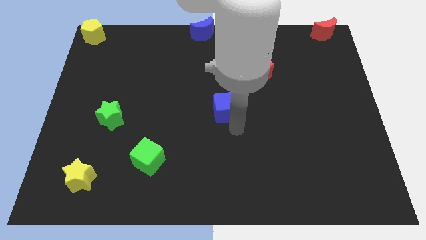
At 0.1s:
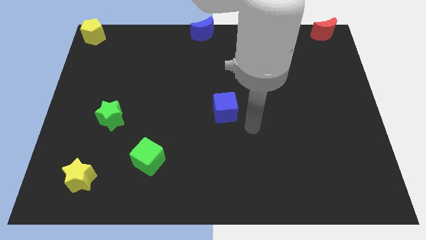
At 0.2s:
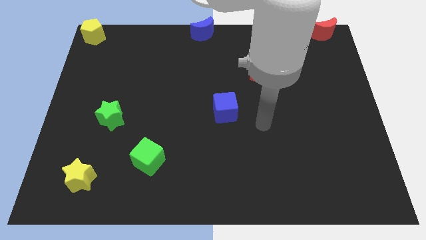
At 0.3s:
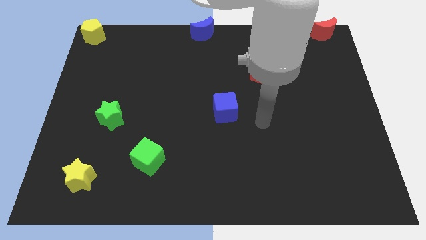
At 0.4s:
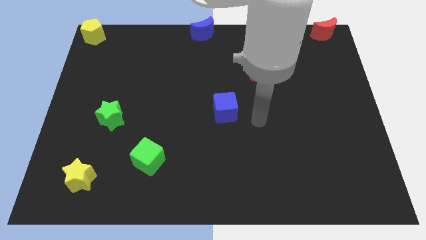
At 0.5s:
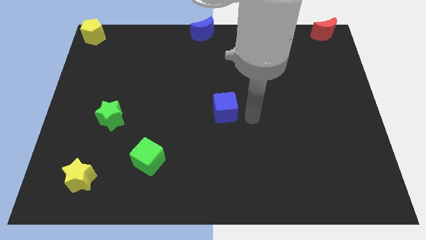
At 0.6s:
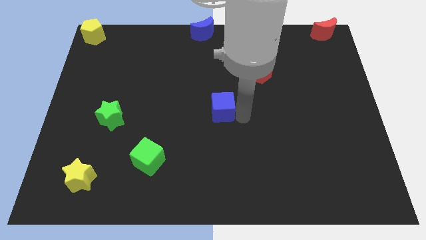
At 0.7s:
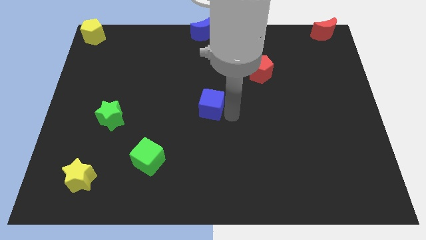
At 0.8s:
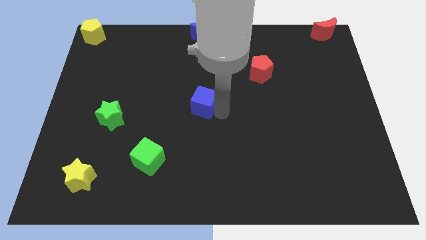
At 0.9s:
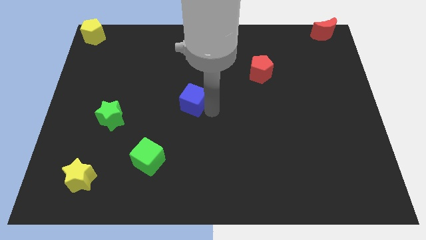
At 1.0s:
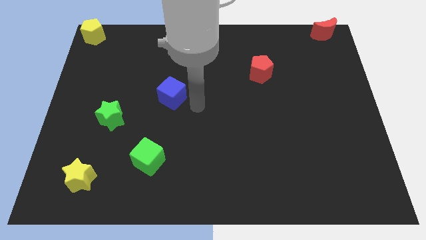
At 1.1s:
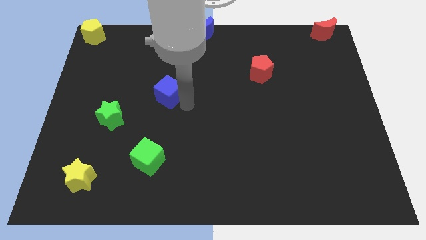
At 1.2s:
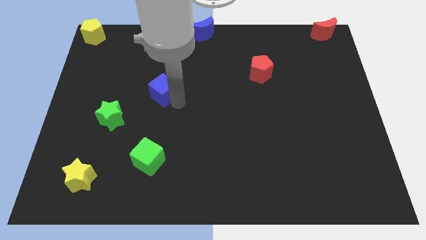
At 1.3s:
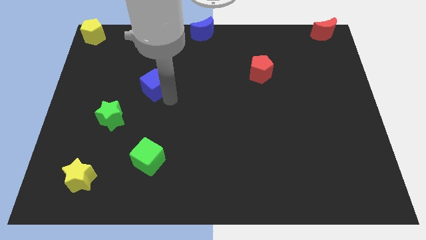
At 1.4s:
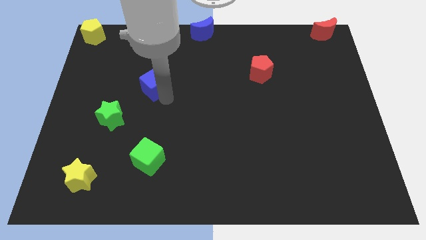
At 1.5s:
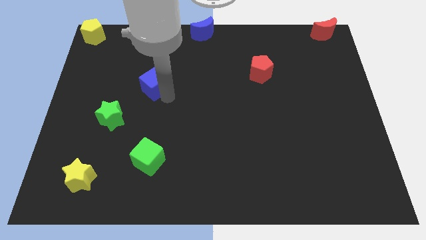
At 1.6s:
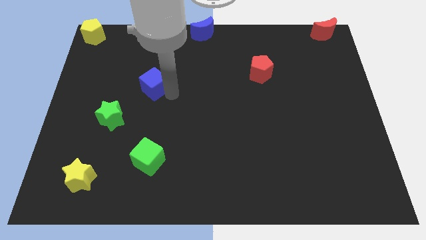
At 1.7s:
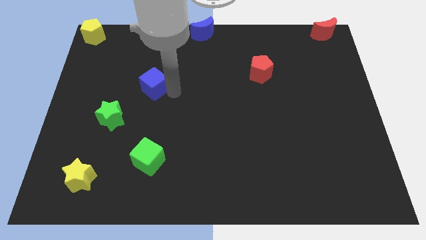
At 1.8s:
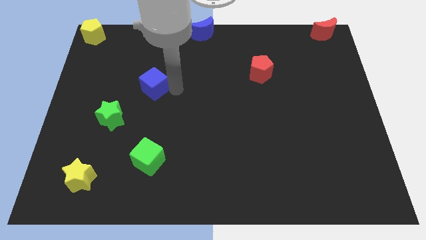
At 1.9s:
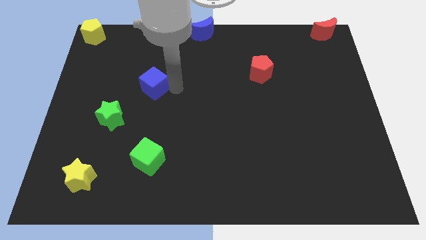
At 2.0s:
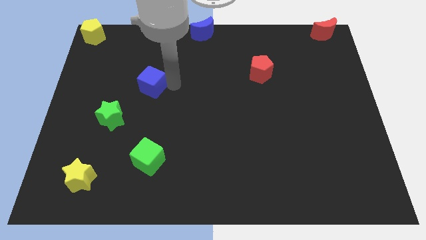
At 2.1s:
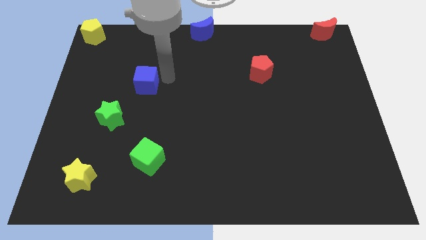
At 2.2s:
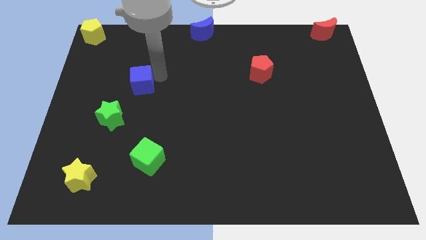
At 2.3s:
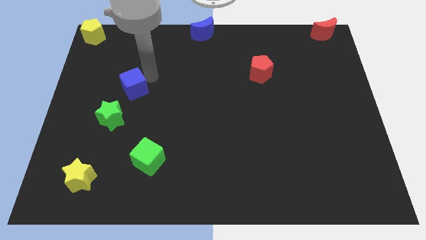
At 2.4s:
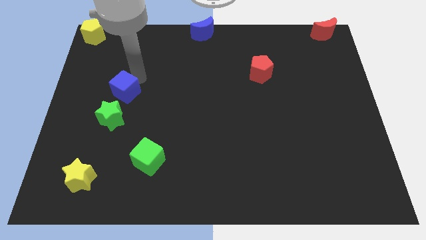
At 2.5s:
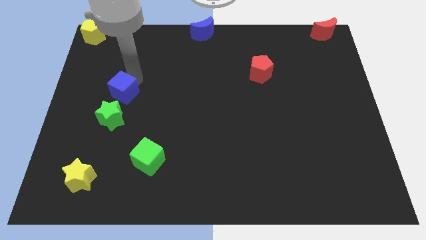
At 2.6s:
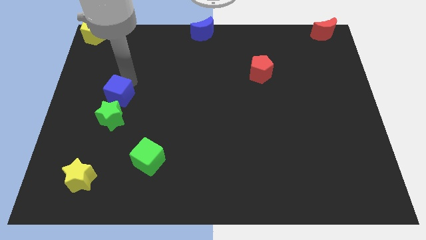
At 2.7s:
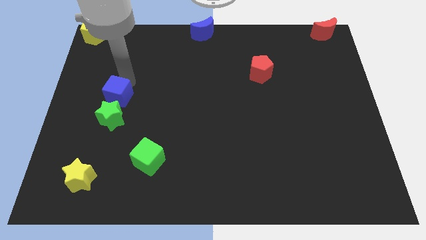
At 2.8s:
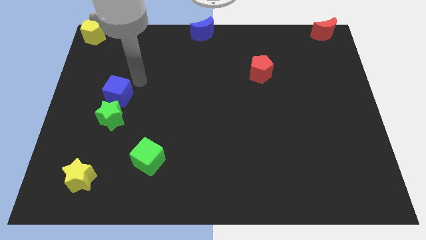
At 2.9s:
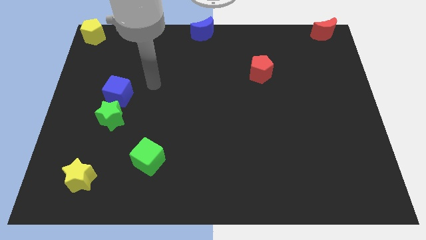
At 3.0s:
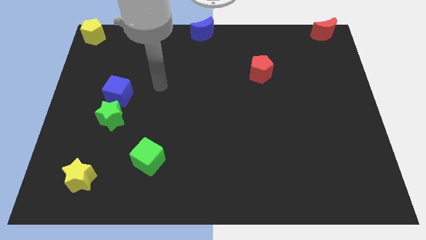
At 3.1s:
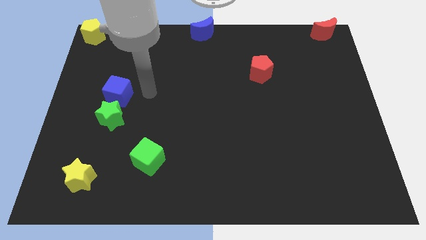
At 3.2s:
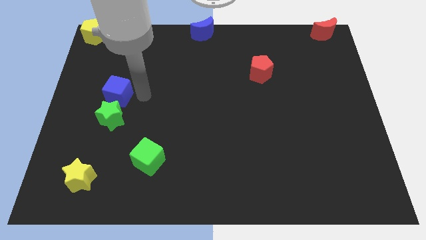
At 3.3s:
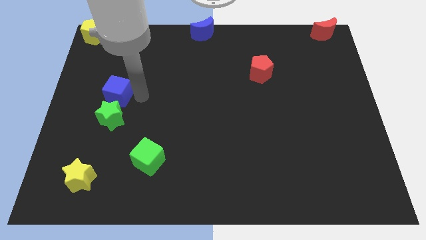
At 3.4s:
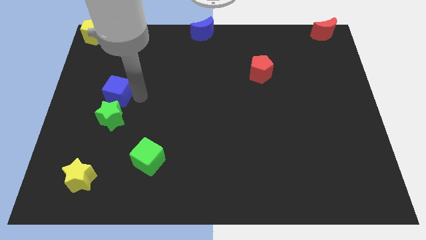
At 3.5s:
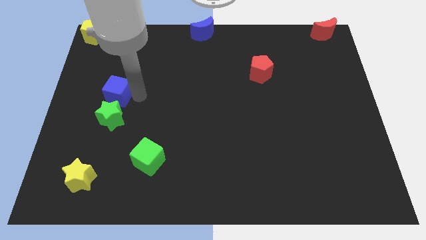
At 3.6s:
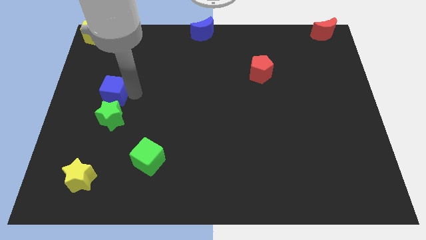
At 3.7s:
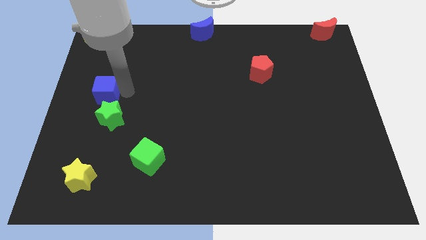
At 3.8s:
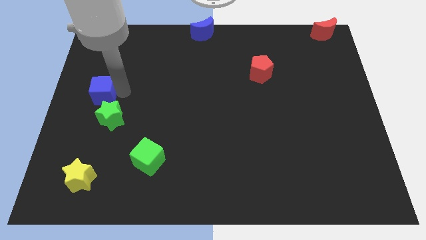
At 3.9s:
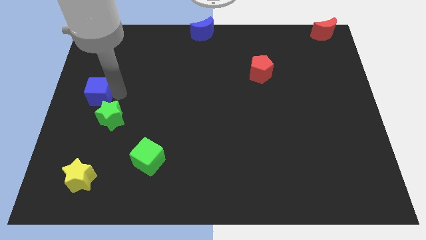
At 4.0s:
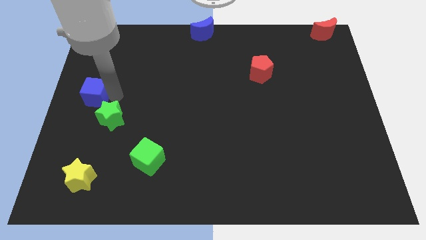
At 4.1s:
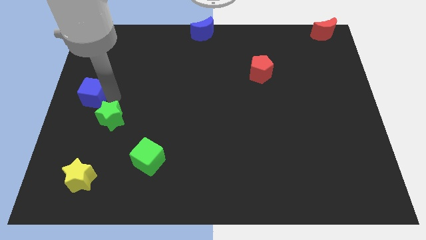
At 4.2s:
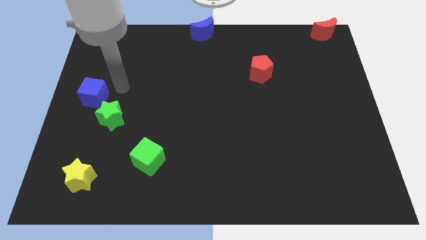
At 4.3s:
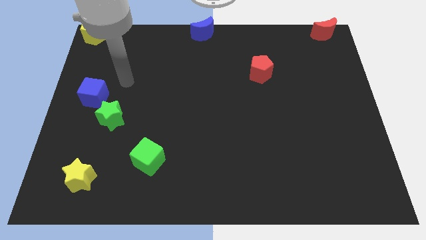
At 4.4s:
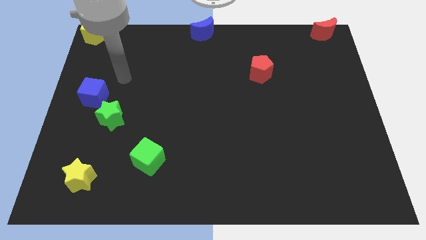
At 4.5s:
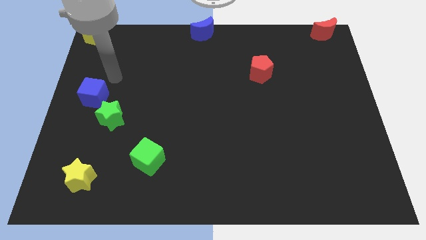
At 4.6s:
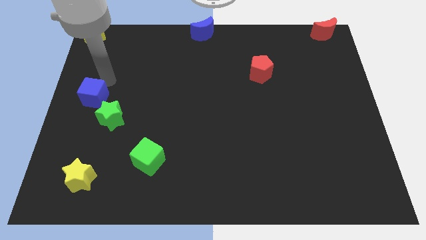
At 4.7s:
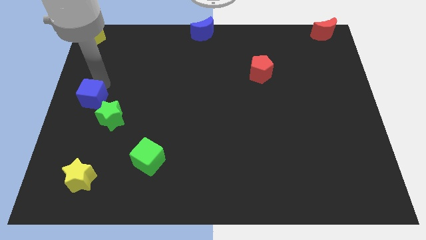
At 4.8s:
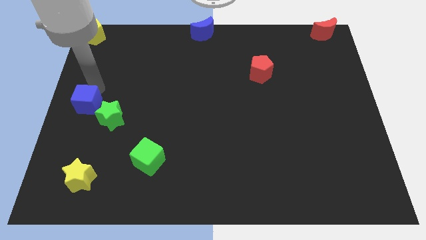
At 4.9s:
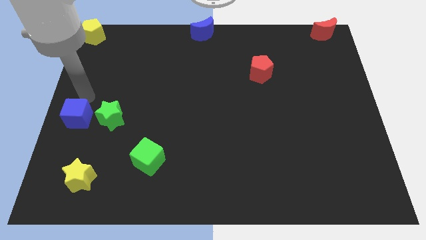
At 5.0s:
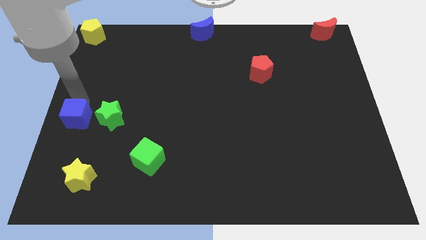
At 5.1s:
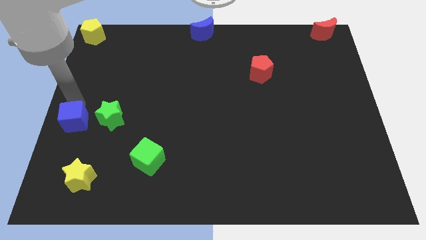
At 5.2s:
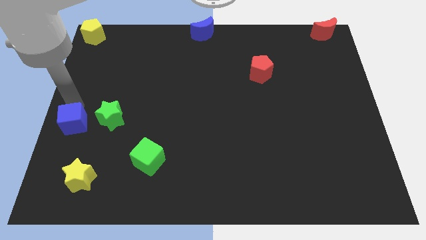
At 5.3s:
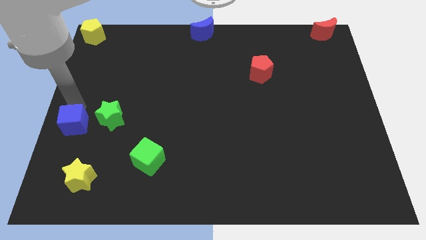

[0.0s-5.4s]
place the blue cube to left side of green star

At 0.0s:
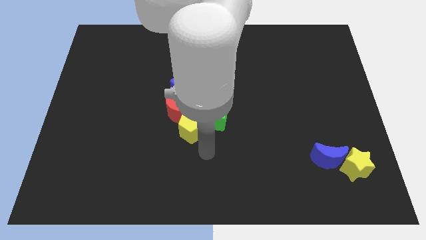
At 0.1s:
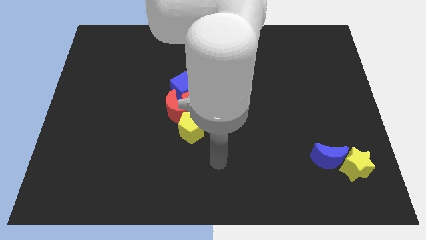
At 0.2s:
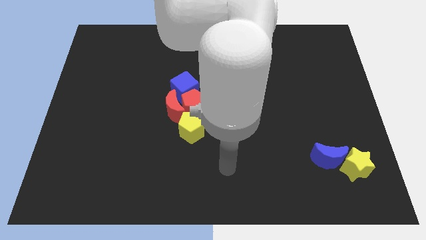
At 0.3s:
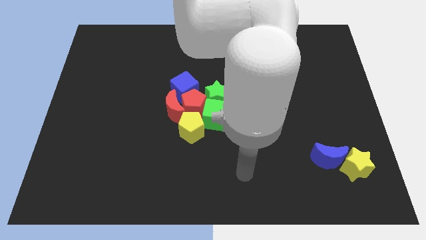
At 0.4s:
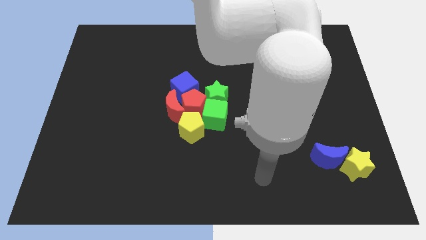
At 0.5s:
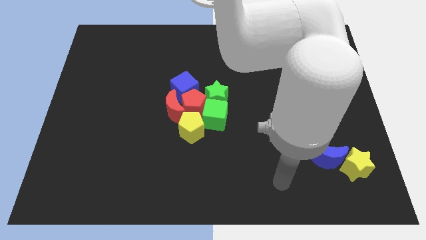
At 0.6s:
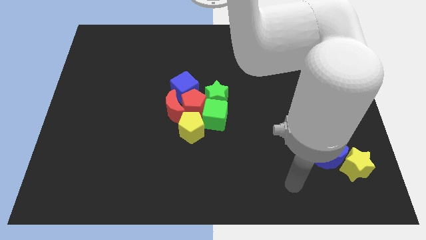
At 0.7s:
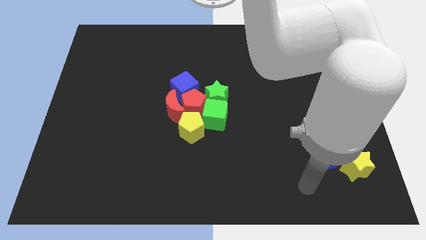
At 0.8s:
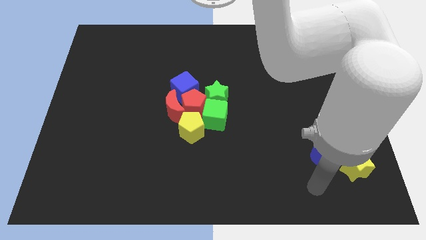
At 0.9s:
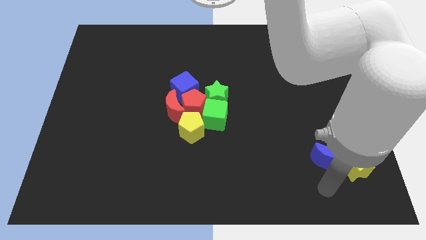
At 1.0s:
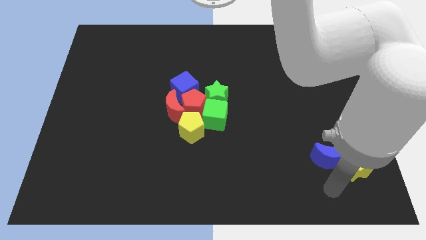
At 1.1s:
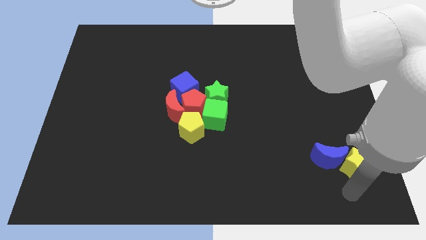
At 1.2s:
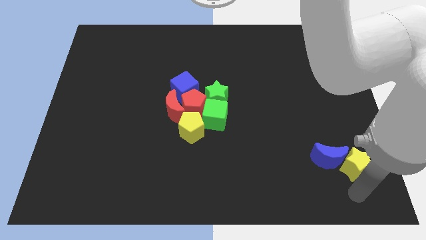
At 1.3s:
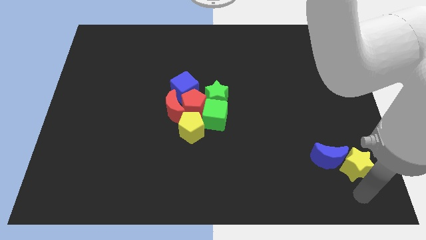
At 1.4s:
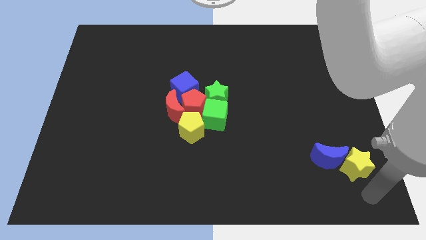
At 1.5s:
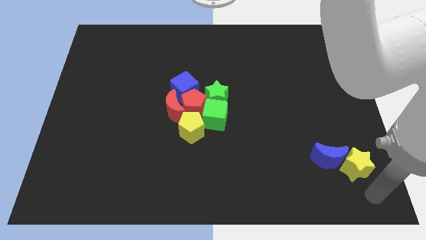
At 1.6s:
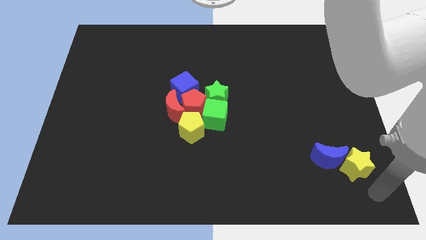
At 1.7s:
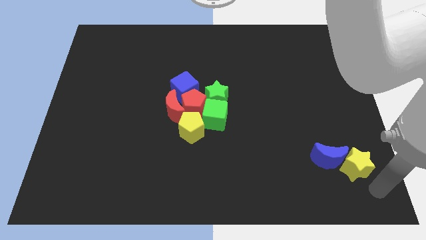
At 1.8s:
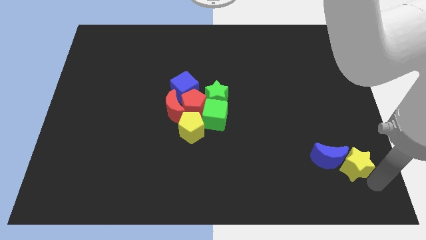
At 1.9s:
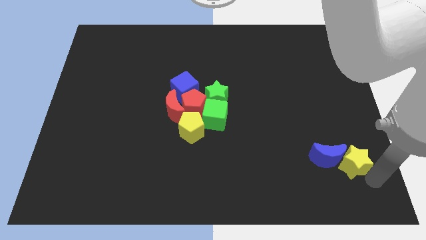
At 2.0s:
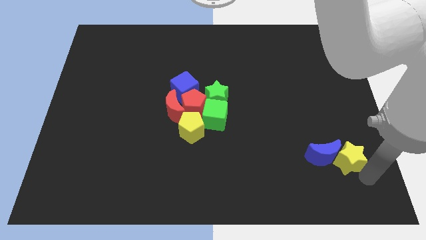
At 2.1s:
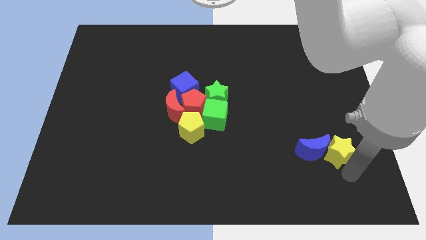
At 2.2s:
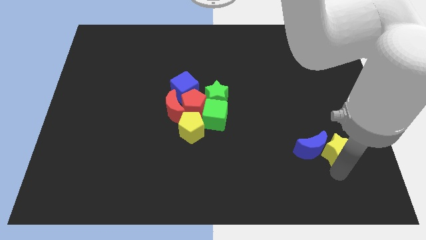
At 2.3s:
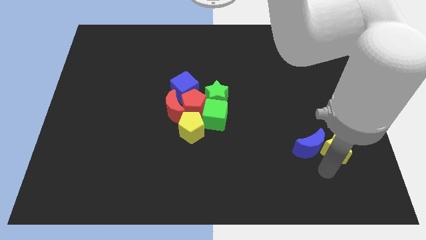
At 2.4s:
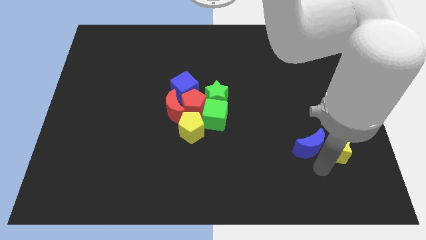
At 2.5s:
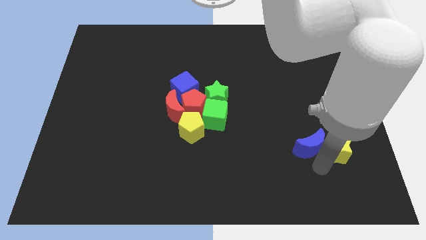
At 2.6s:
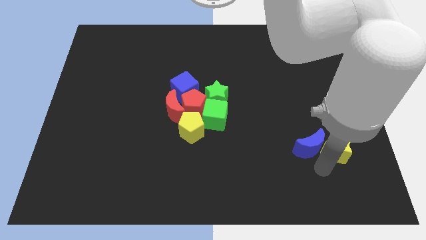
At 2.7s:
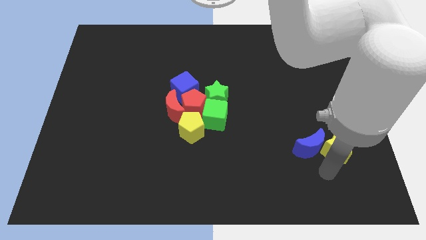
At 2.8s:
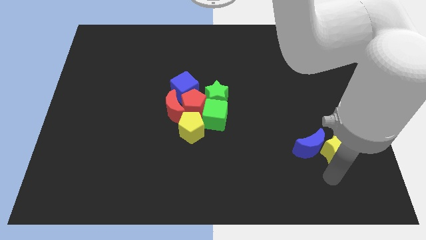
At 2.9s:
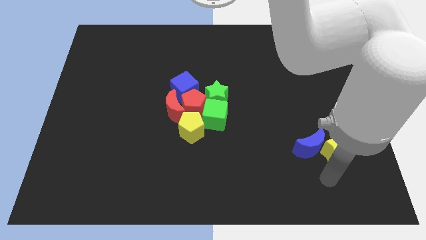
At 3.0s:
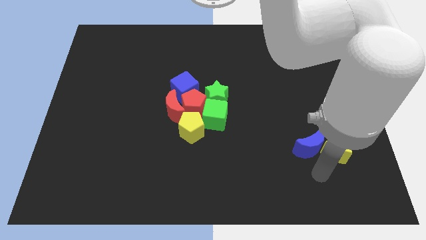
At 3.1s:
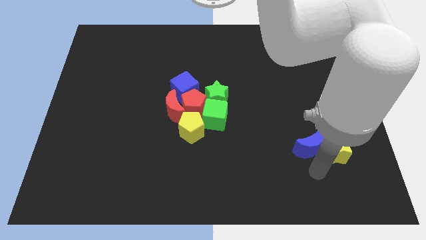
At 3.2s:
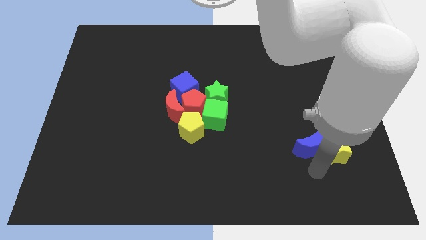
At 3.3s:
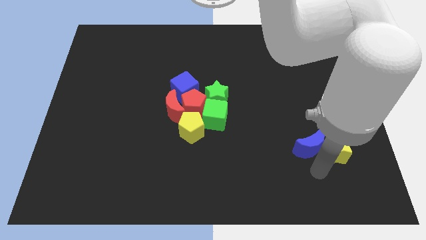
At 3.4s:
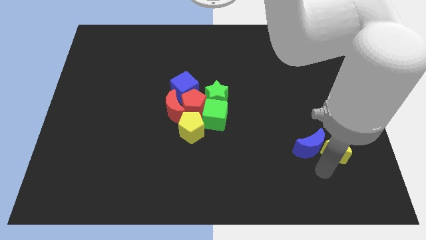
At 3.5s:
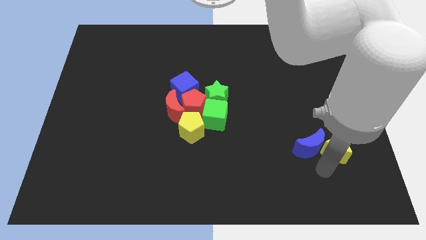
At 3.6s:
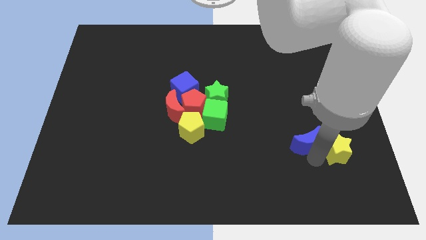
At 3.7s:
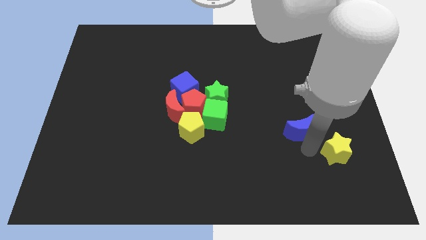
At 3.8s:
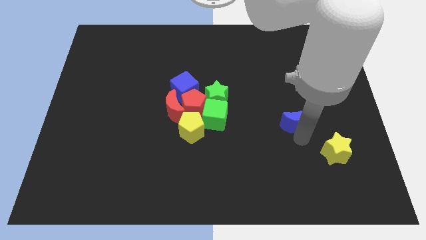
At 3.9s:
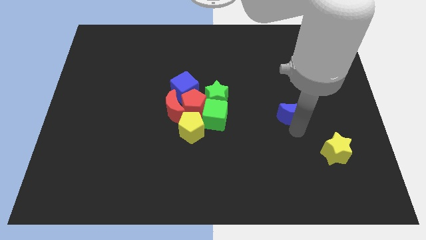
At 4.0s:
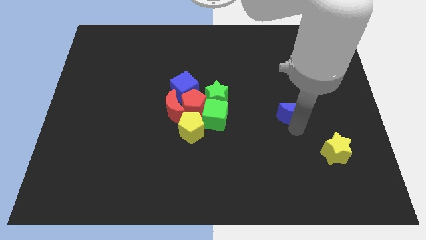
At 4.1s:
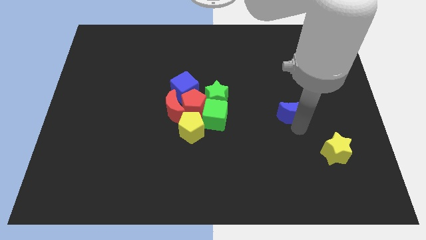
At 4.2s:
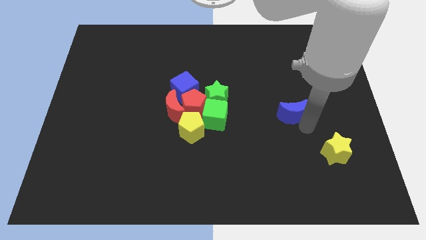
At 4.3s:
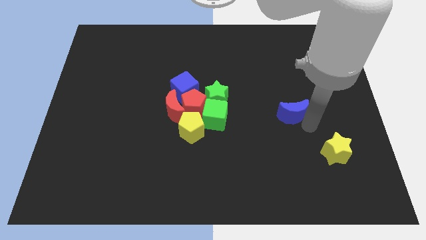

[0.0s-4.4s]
separate the blue cube and yellow star
